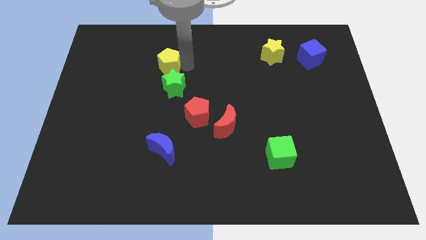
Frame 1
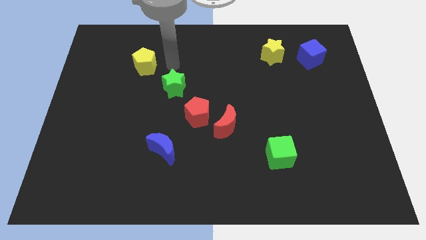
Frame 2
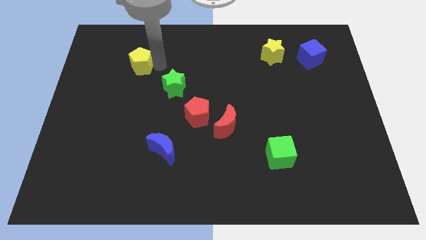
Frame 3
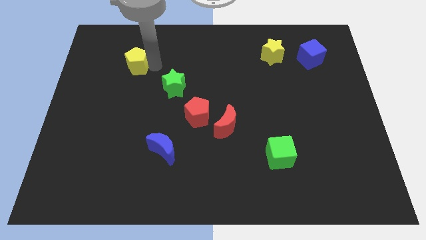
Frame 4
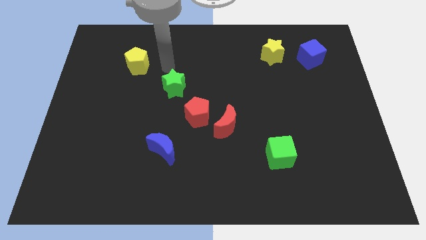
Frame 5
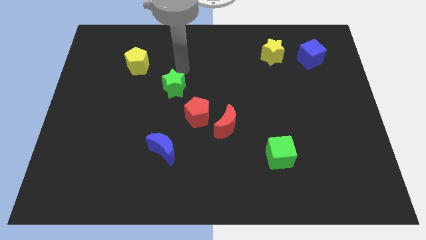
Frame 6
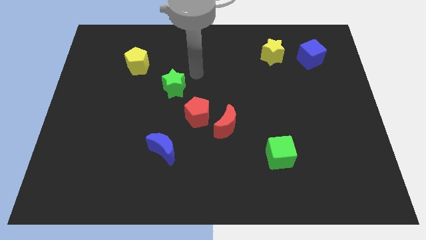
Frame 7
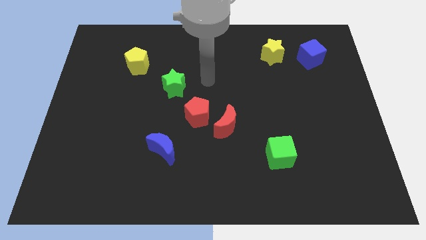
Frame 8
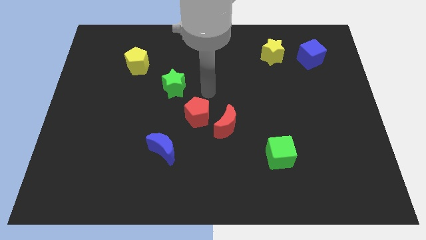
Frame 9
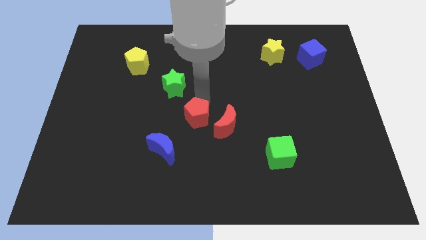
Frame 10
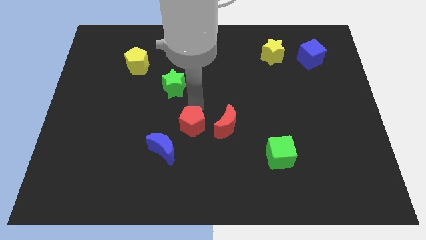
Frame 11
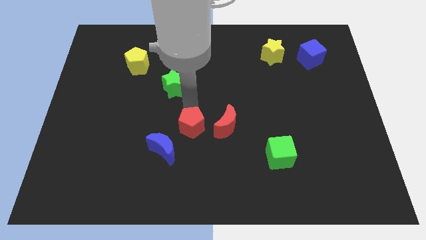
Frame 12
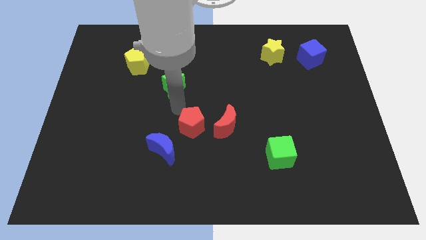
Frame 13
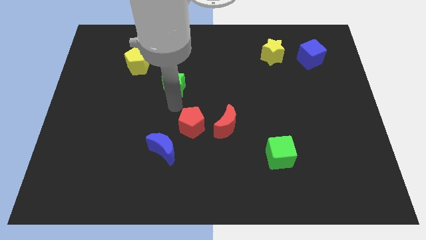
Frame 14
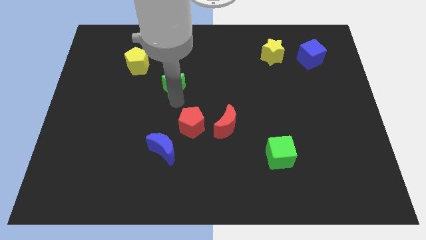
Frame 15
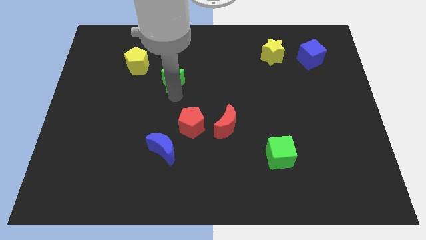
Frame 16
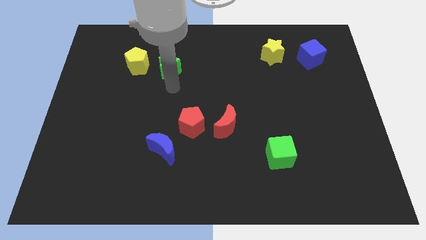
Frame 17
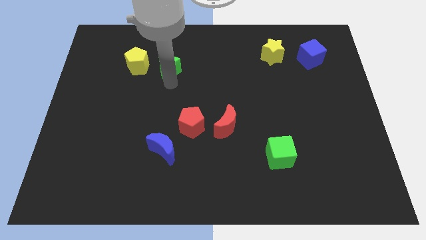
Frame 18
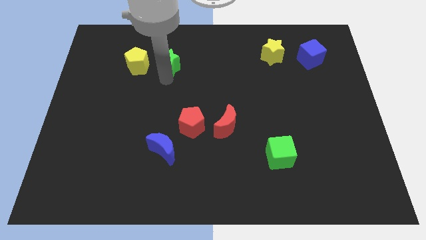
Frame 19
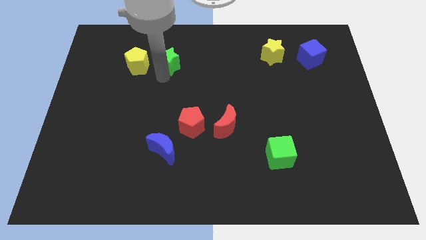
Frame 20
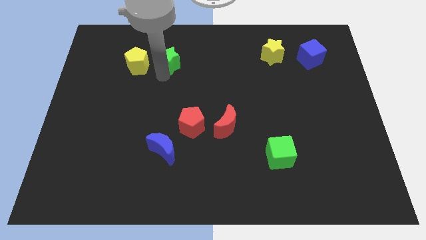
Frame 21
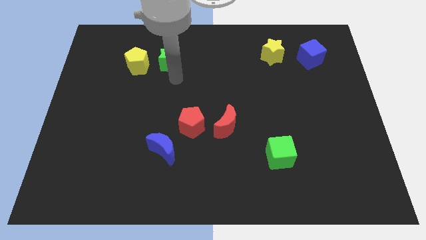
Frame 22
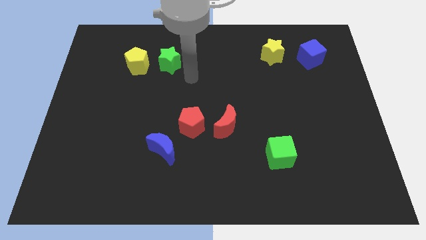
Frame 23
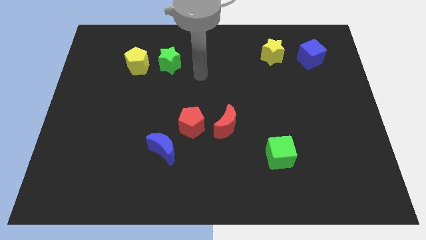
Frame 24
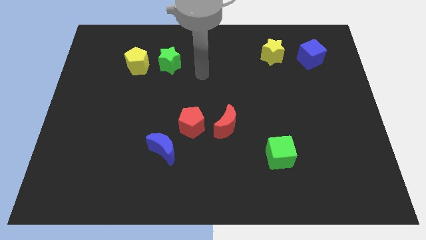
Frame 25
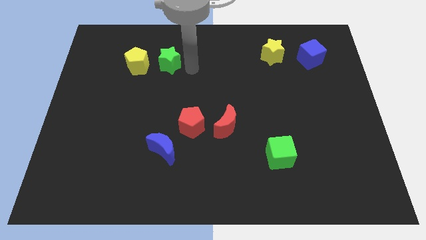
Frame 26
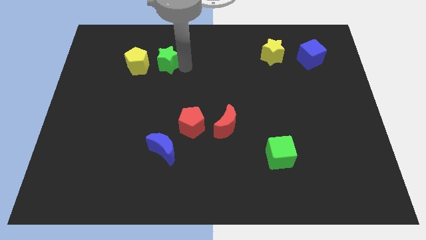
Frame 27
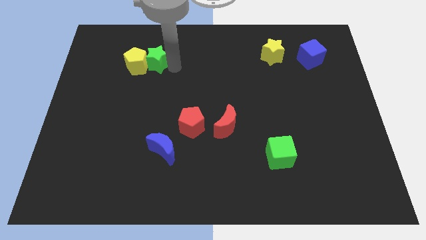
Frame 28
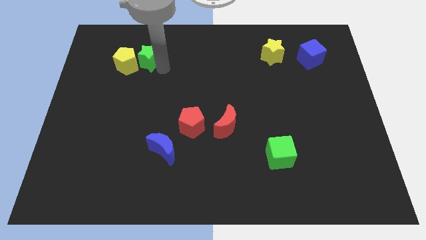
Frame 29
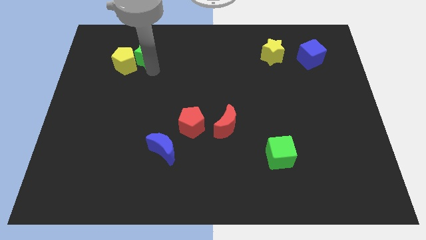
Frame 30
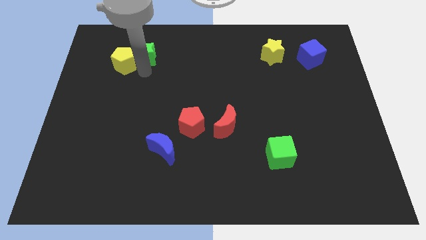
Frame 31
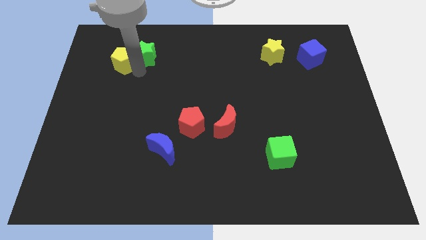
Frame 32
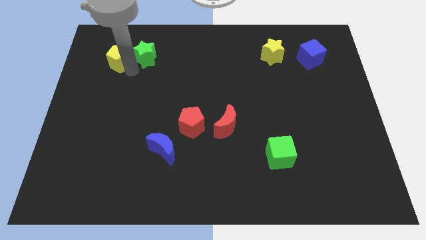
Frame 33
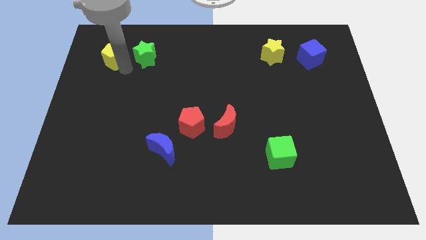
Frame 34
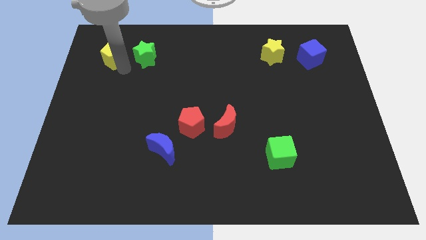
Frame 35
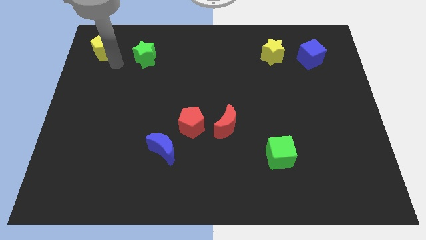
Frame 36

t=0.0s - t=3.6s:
push the green star into the yellow pentagon

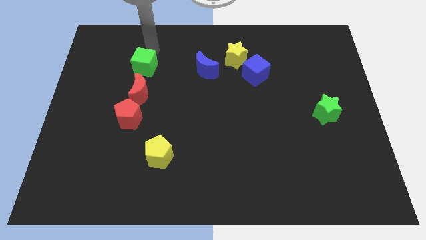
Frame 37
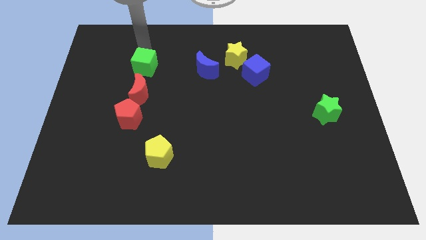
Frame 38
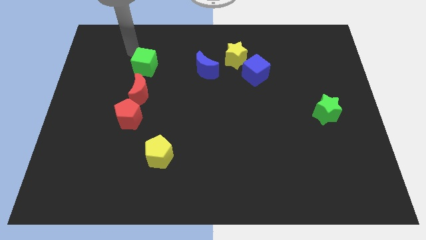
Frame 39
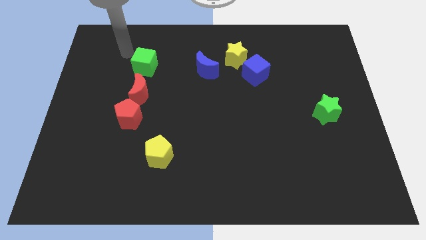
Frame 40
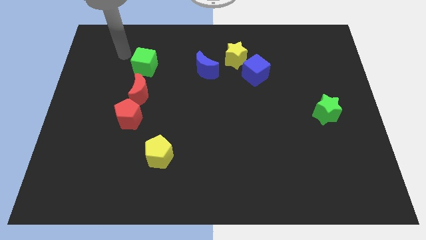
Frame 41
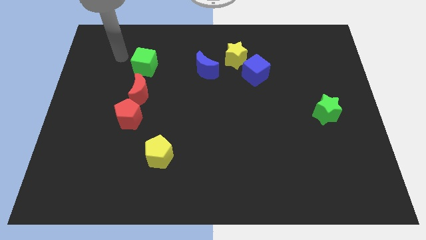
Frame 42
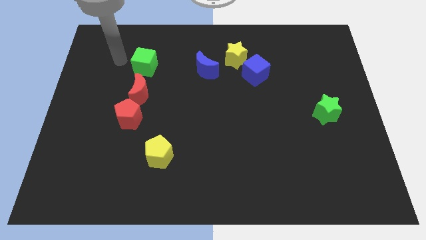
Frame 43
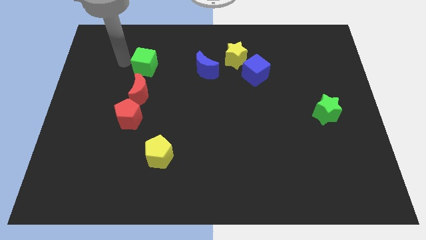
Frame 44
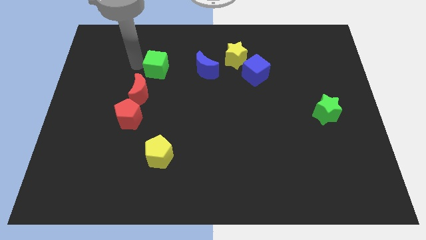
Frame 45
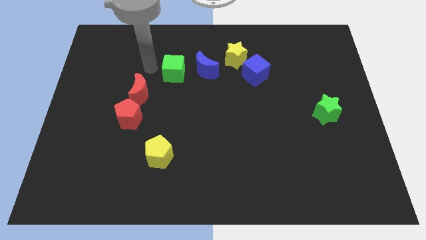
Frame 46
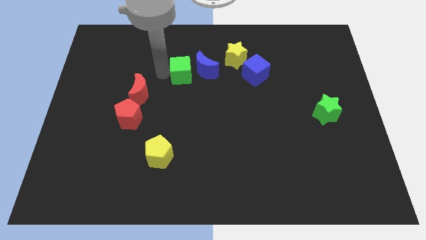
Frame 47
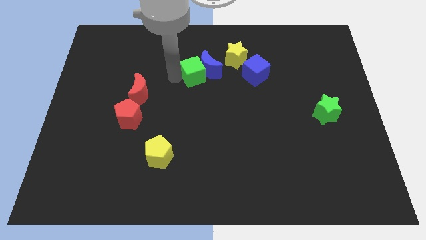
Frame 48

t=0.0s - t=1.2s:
move green cube left beside blue moon

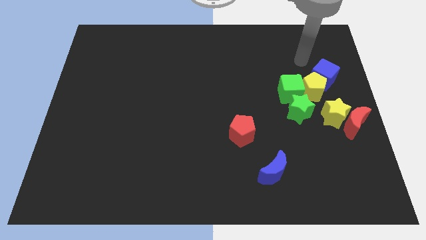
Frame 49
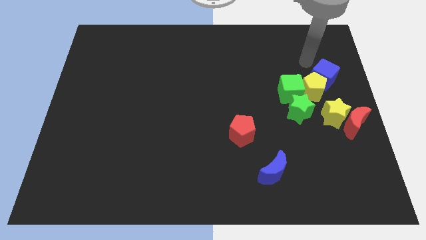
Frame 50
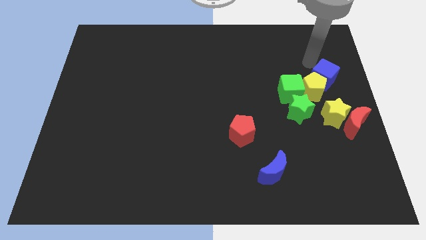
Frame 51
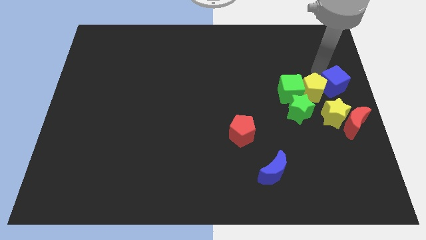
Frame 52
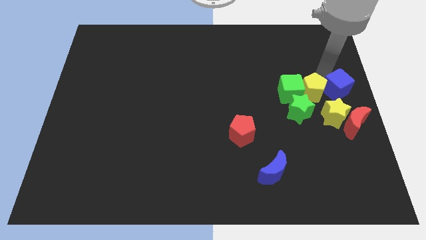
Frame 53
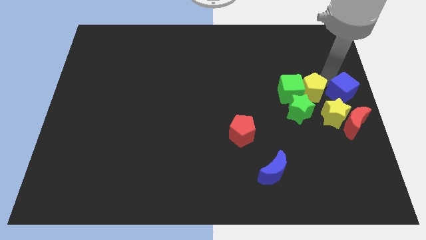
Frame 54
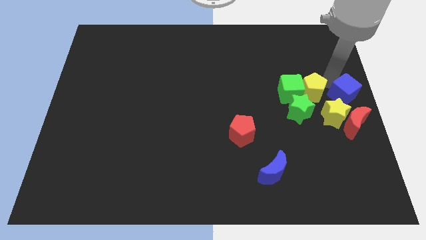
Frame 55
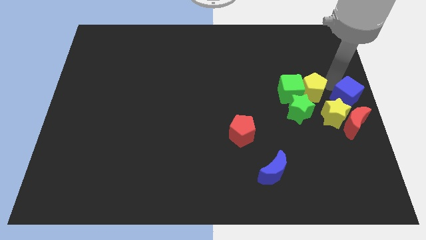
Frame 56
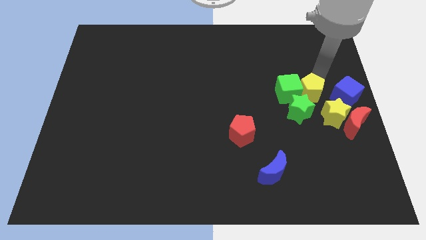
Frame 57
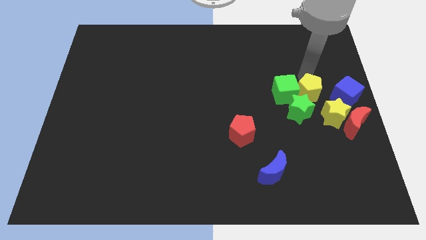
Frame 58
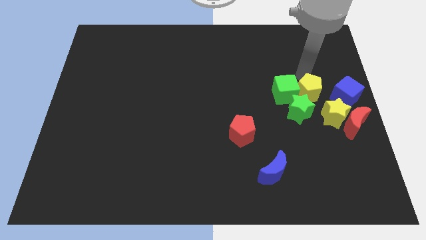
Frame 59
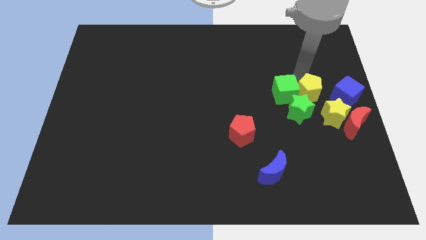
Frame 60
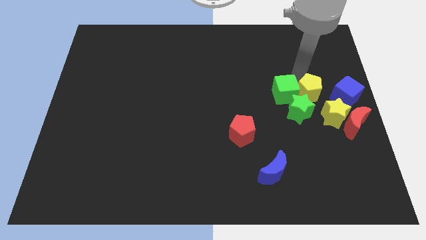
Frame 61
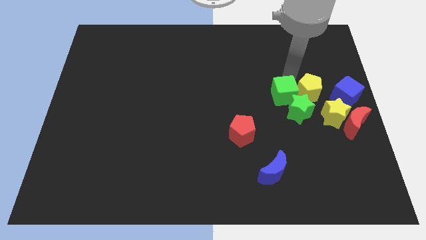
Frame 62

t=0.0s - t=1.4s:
move the blue cube above the yellow star

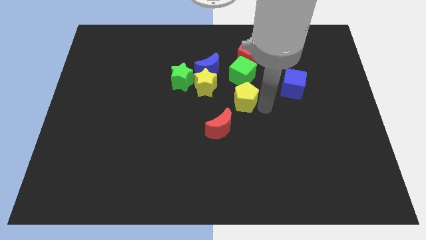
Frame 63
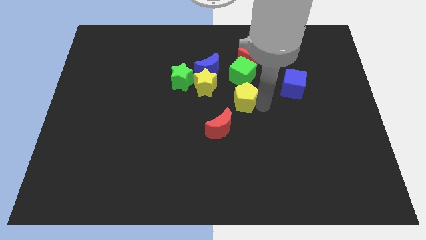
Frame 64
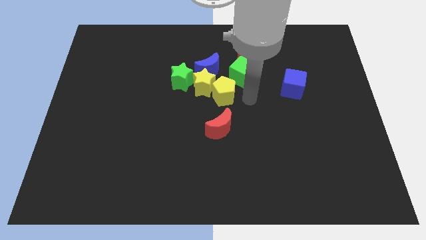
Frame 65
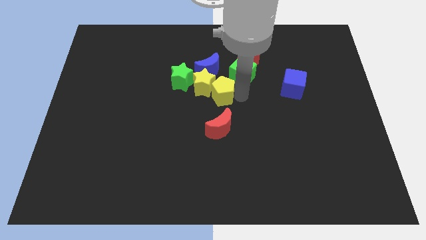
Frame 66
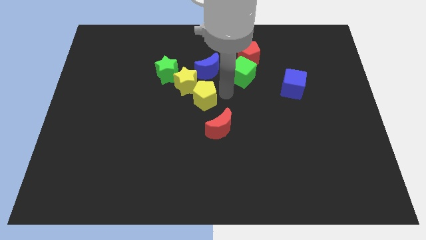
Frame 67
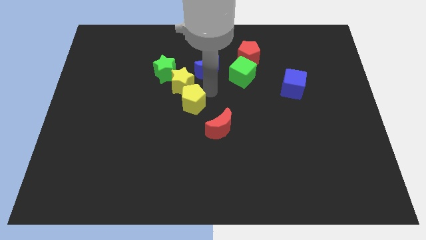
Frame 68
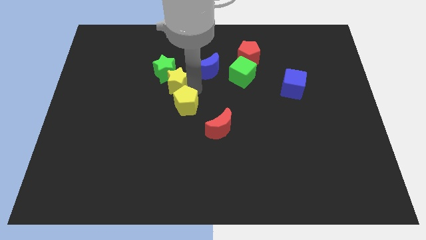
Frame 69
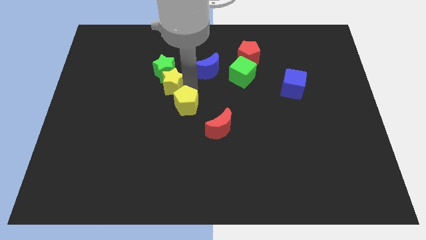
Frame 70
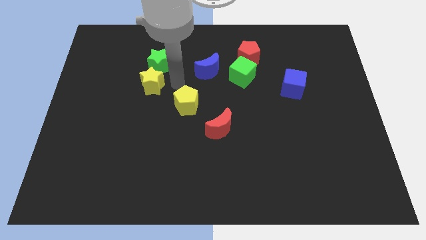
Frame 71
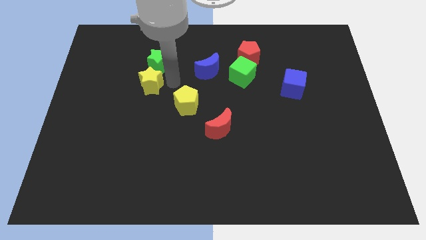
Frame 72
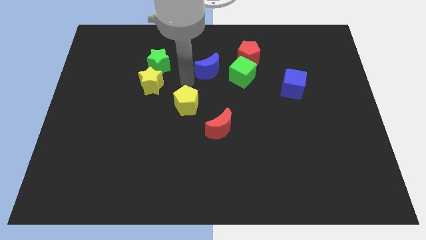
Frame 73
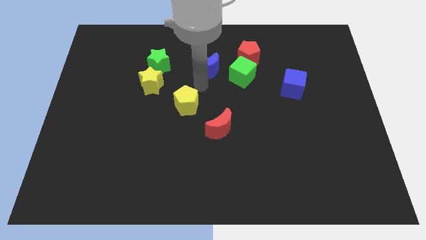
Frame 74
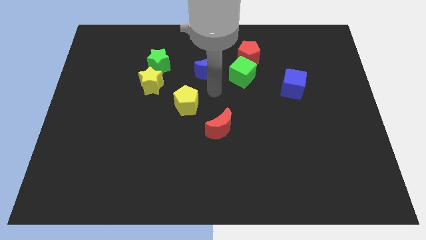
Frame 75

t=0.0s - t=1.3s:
place yellow pentagon to the bottom of blue moon

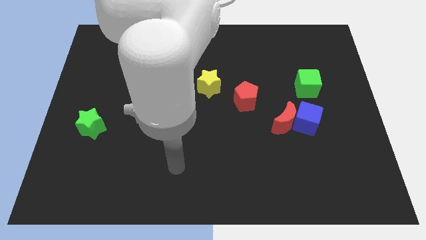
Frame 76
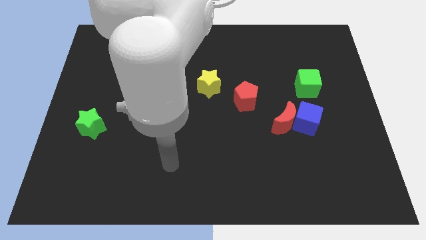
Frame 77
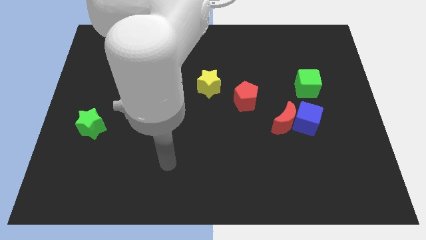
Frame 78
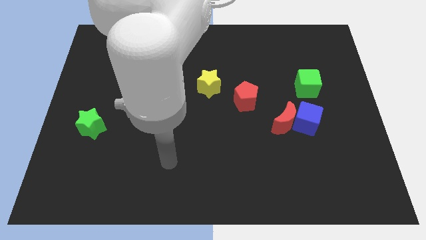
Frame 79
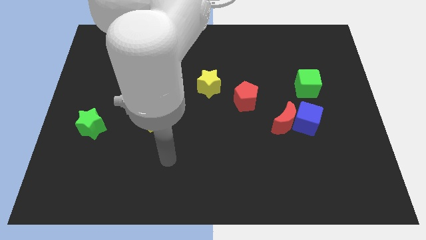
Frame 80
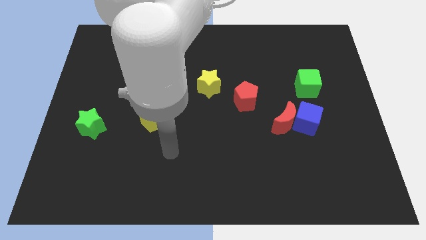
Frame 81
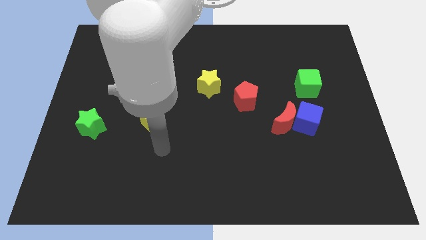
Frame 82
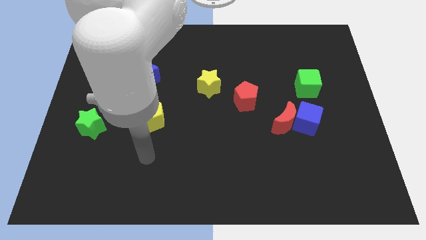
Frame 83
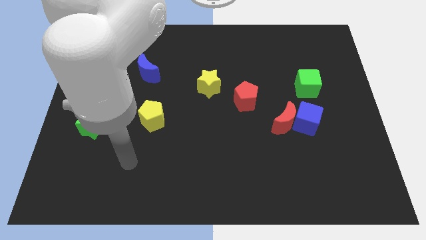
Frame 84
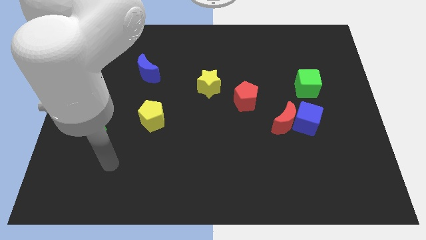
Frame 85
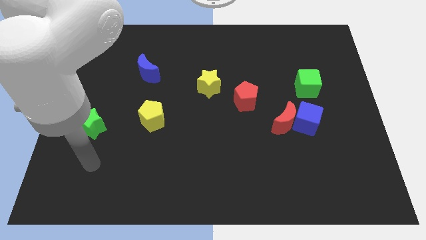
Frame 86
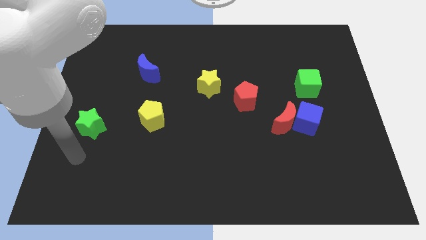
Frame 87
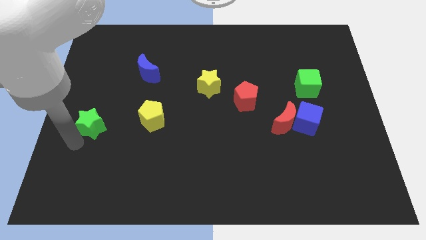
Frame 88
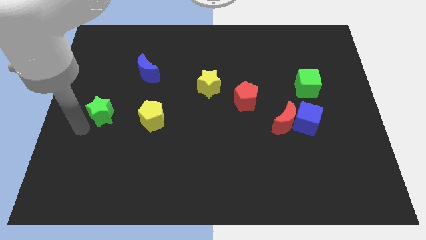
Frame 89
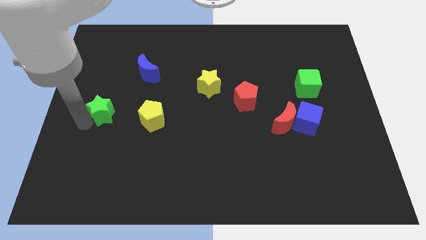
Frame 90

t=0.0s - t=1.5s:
move your arm left to the green star
